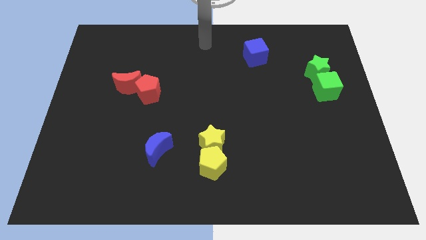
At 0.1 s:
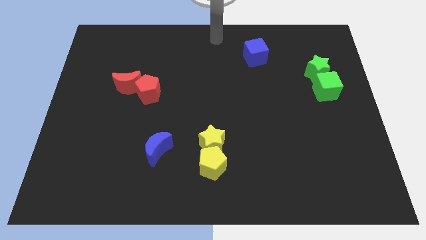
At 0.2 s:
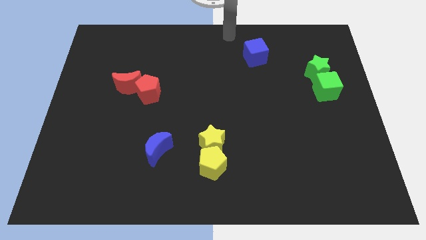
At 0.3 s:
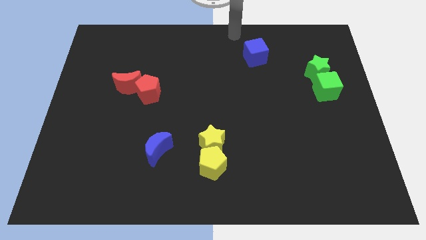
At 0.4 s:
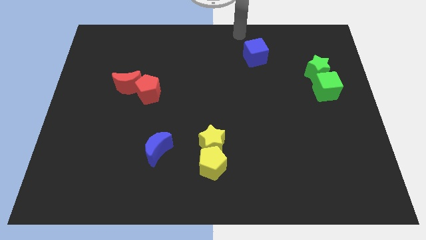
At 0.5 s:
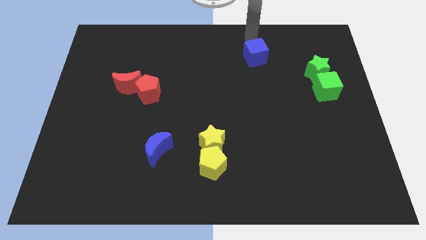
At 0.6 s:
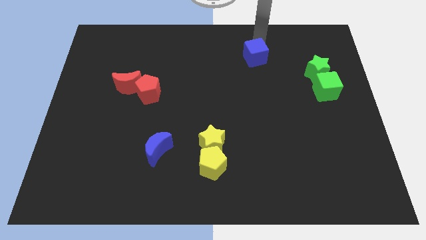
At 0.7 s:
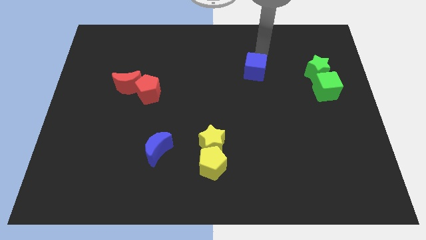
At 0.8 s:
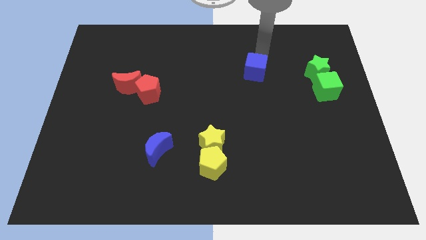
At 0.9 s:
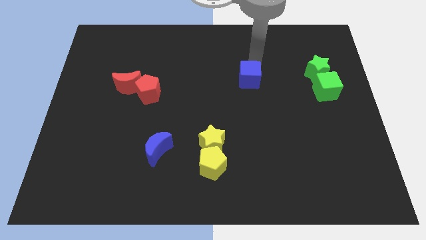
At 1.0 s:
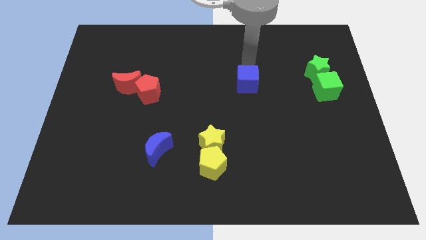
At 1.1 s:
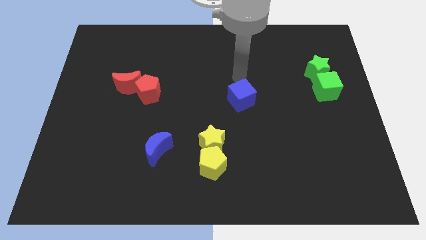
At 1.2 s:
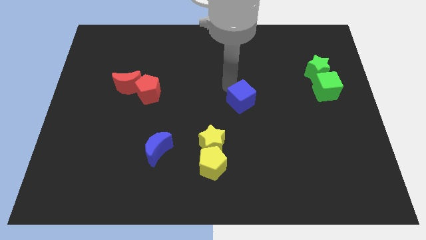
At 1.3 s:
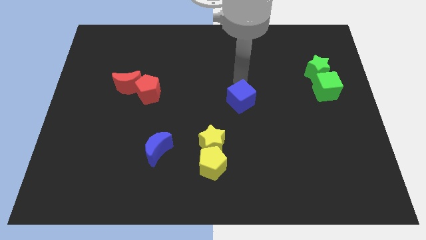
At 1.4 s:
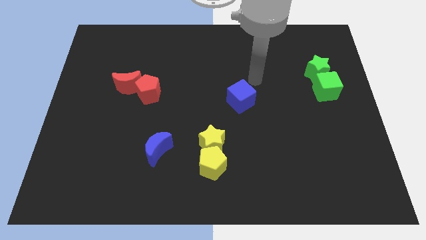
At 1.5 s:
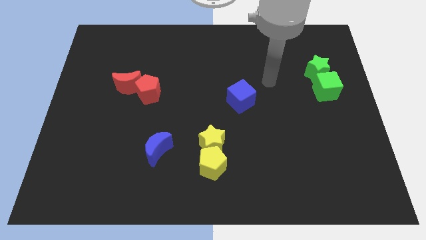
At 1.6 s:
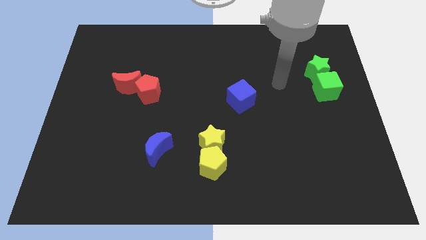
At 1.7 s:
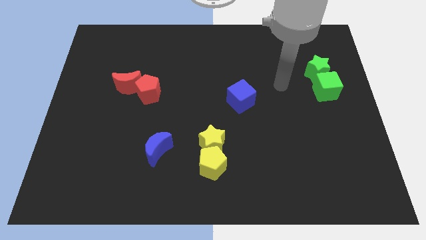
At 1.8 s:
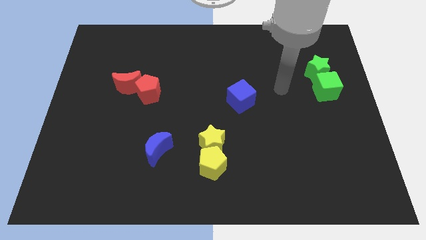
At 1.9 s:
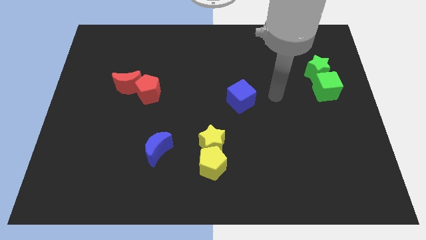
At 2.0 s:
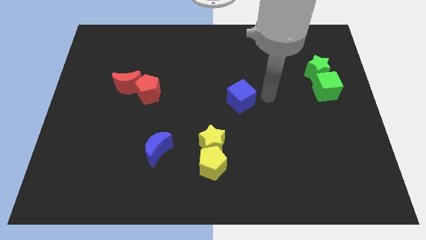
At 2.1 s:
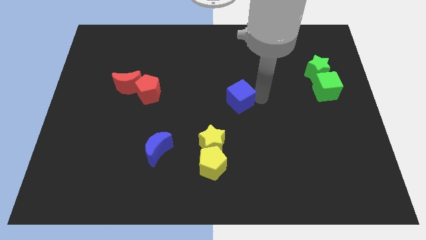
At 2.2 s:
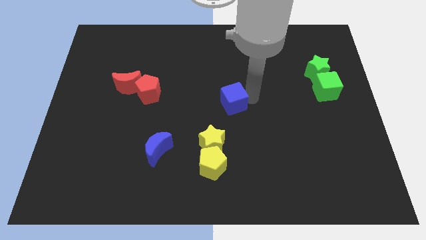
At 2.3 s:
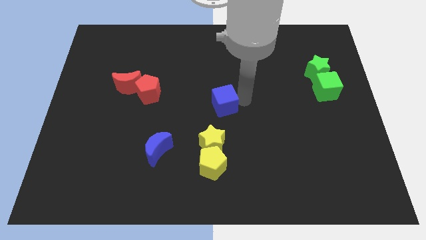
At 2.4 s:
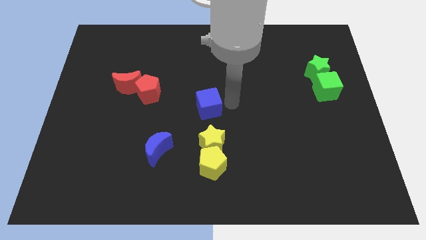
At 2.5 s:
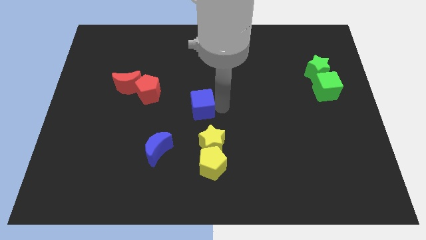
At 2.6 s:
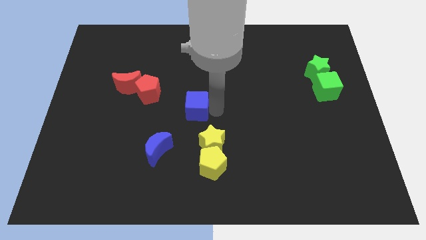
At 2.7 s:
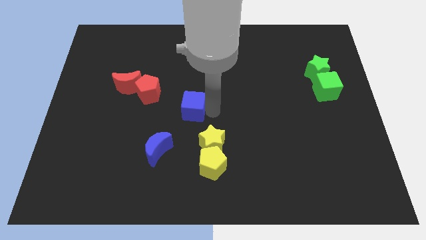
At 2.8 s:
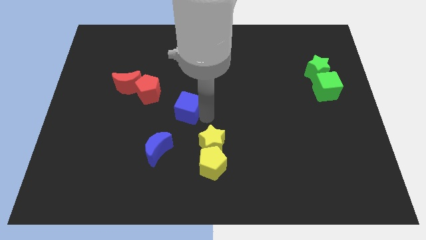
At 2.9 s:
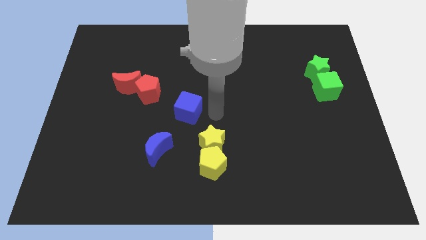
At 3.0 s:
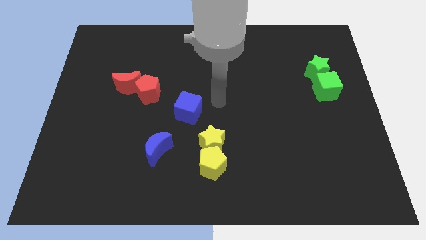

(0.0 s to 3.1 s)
drag the blue cube slightly downwards

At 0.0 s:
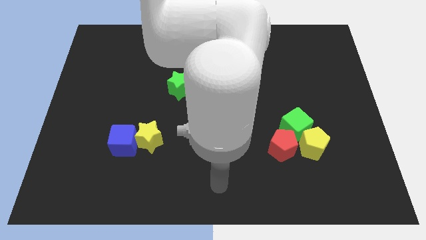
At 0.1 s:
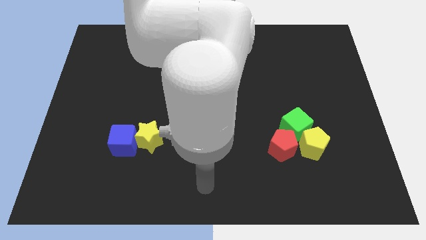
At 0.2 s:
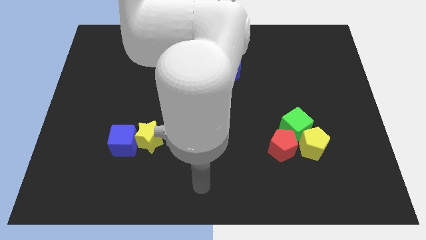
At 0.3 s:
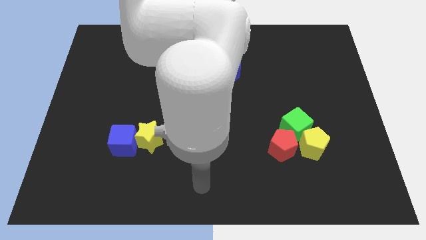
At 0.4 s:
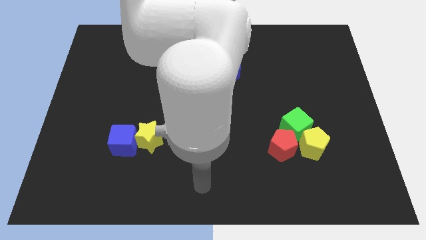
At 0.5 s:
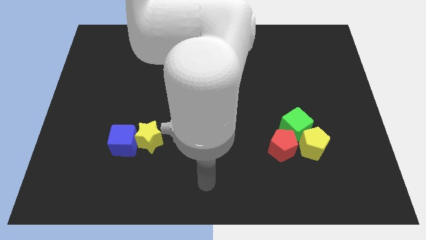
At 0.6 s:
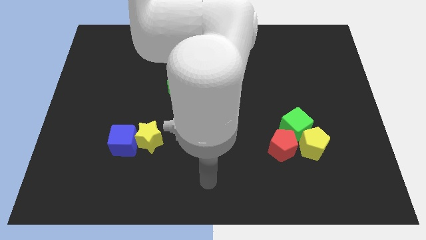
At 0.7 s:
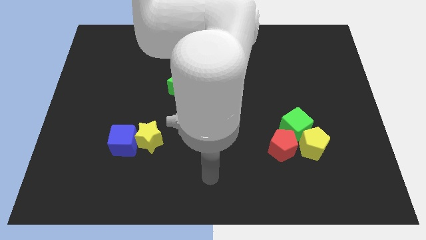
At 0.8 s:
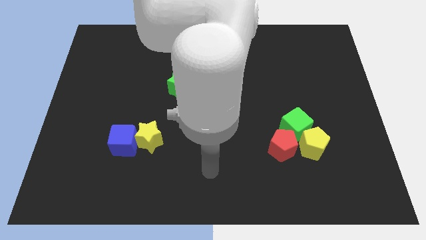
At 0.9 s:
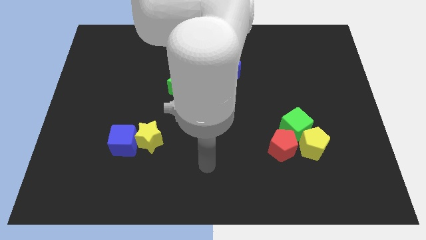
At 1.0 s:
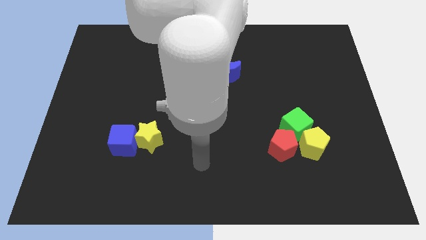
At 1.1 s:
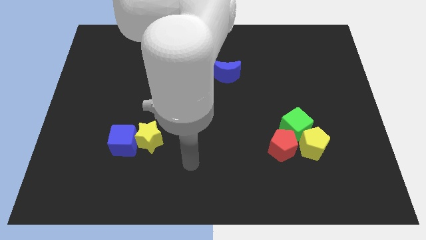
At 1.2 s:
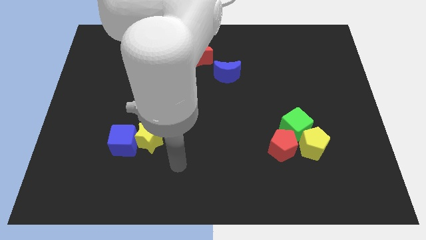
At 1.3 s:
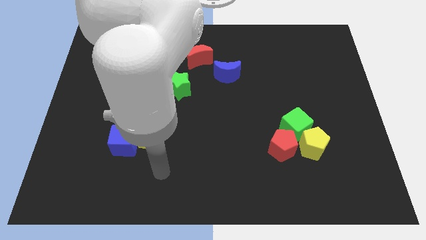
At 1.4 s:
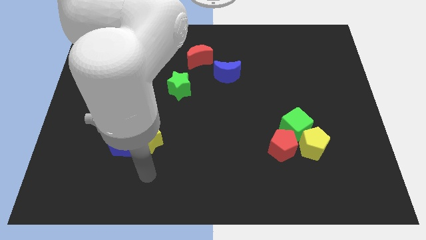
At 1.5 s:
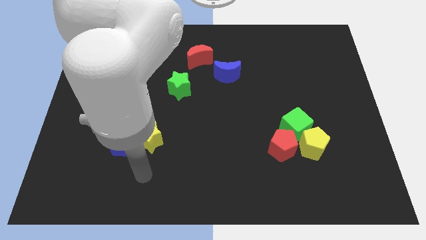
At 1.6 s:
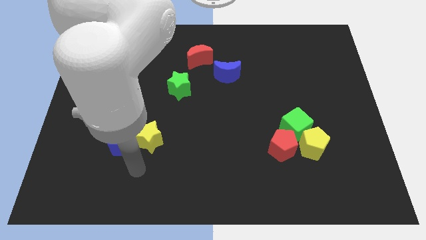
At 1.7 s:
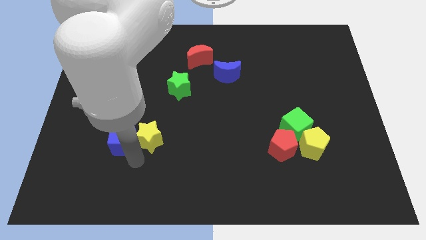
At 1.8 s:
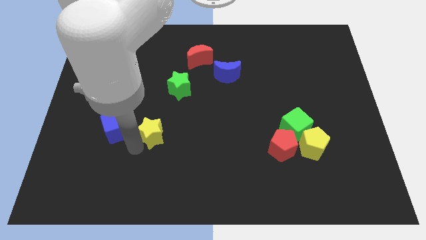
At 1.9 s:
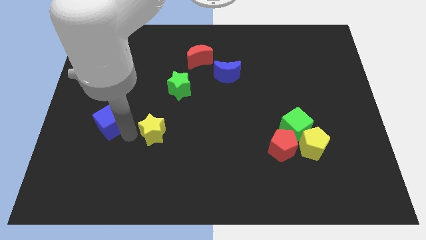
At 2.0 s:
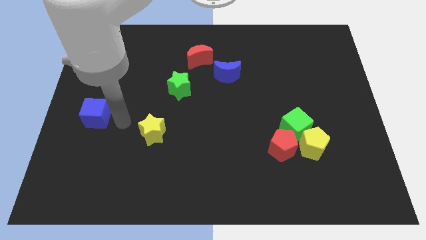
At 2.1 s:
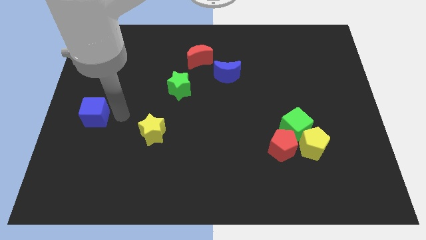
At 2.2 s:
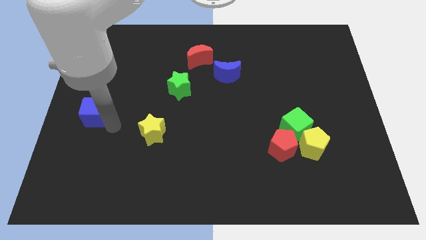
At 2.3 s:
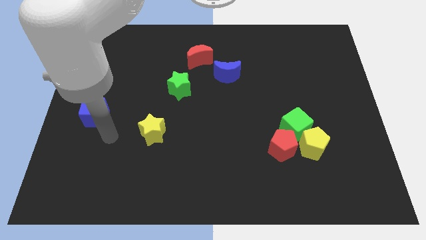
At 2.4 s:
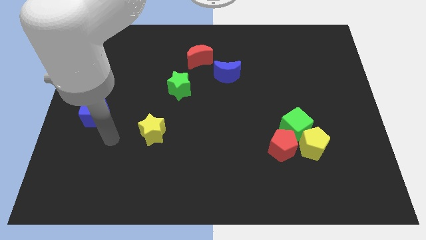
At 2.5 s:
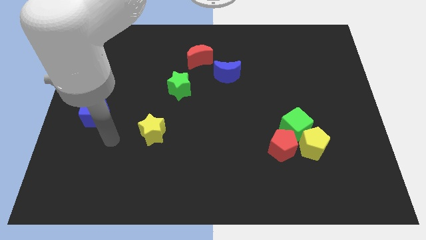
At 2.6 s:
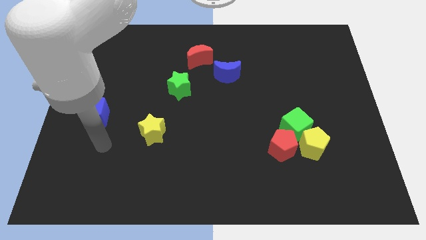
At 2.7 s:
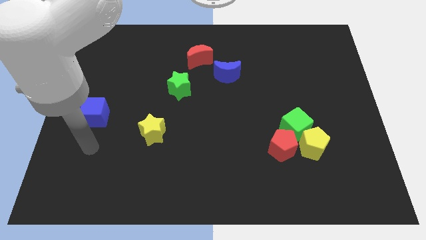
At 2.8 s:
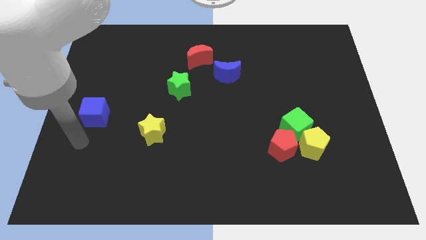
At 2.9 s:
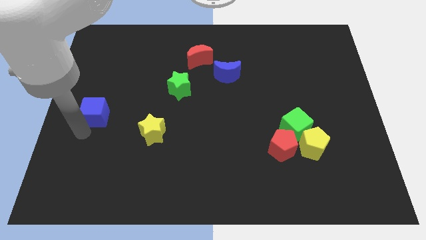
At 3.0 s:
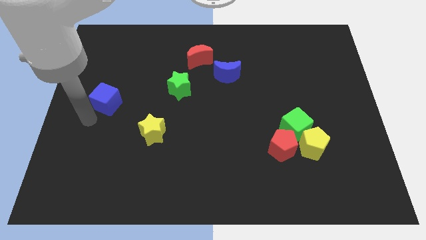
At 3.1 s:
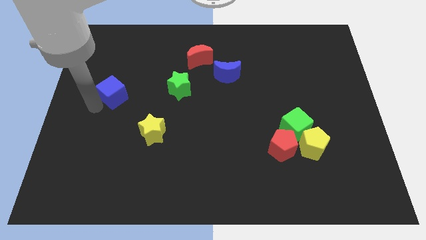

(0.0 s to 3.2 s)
push the blue cube to the top left of the yellow star

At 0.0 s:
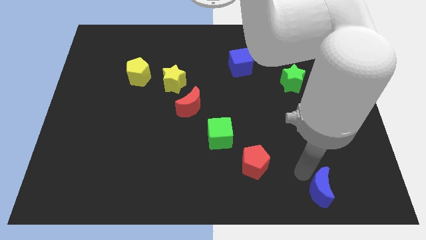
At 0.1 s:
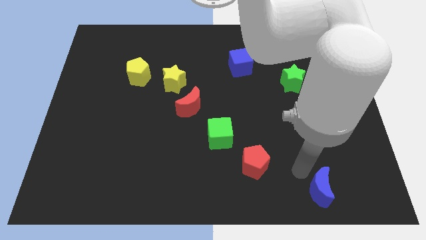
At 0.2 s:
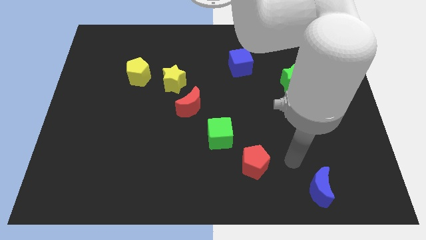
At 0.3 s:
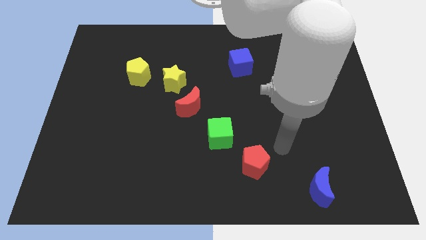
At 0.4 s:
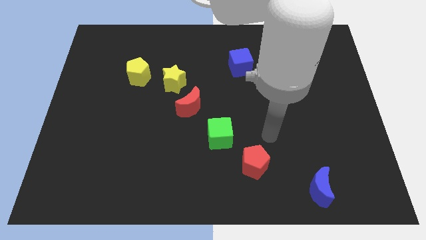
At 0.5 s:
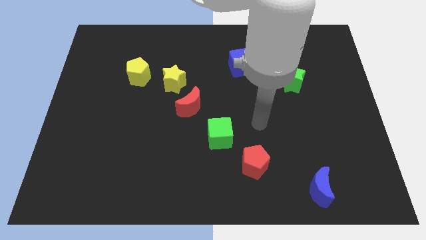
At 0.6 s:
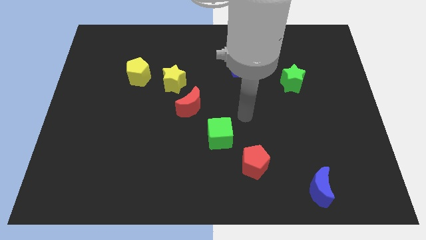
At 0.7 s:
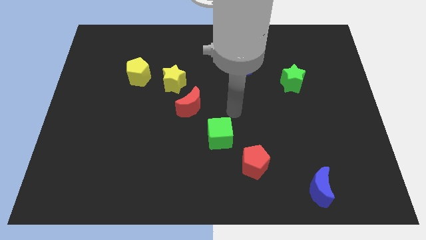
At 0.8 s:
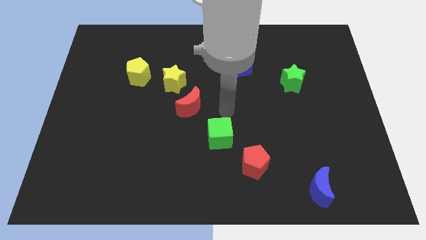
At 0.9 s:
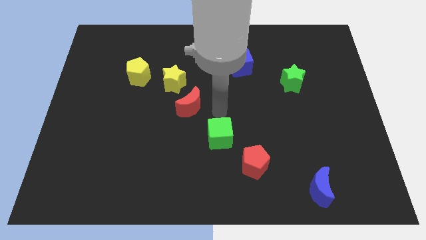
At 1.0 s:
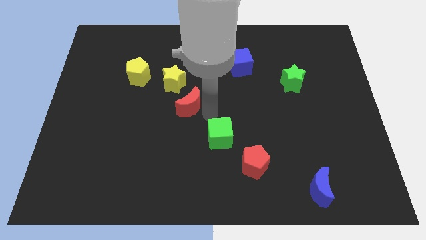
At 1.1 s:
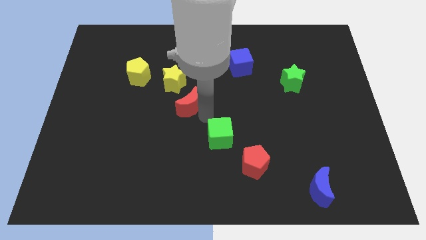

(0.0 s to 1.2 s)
place arm on the top of green cube

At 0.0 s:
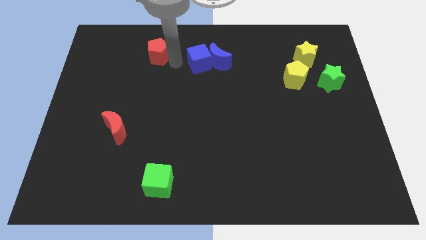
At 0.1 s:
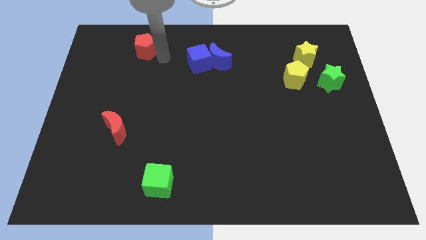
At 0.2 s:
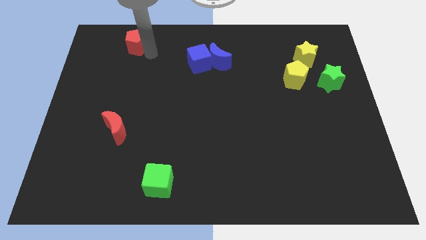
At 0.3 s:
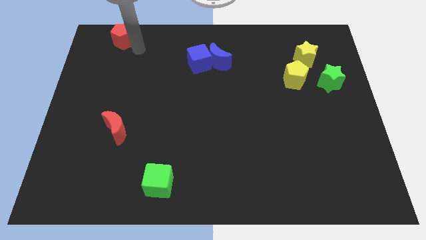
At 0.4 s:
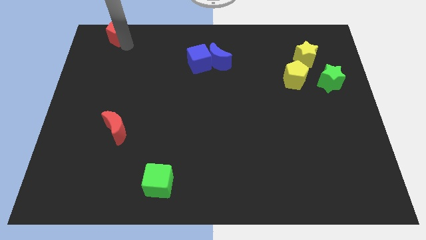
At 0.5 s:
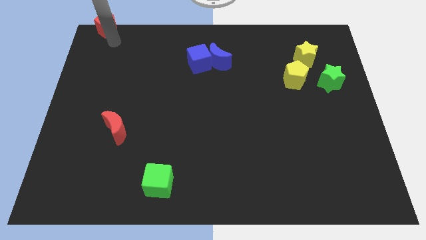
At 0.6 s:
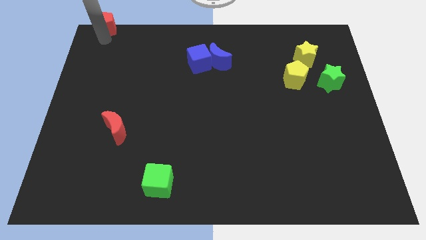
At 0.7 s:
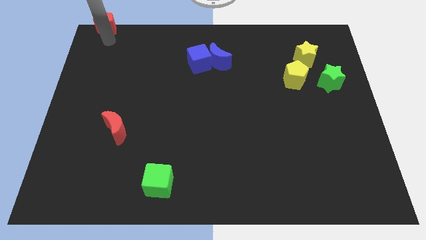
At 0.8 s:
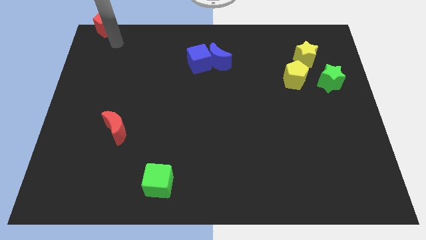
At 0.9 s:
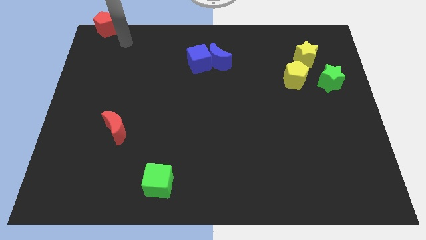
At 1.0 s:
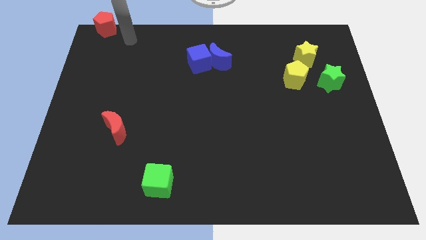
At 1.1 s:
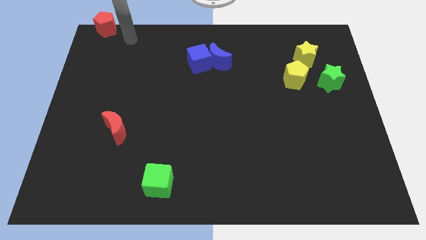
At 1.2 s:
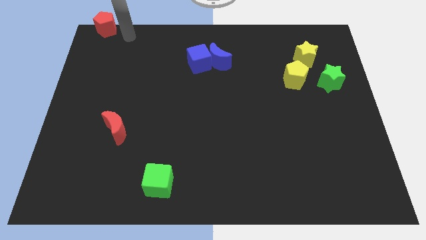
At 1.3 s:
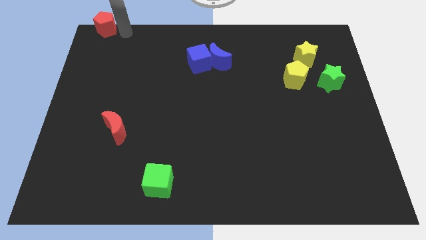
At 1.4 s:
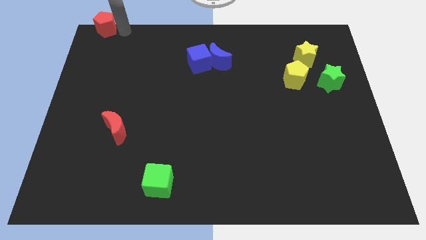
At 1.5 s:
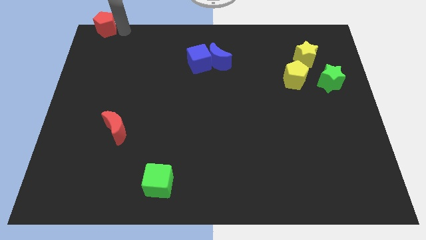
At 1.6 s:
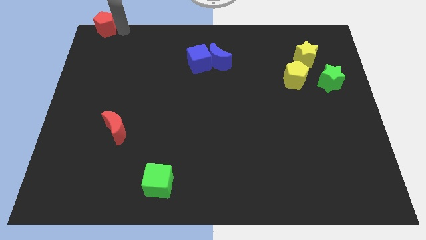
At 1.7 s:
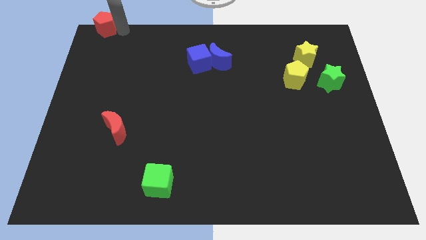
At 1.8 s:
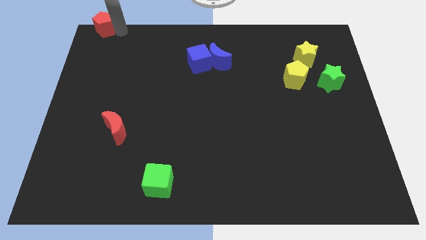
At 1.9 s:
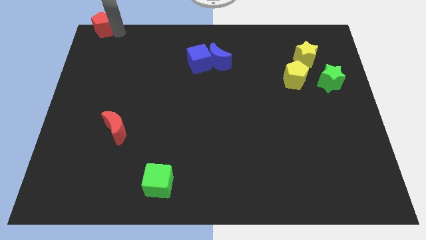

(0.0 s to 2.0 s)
push the red pentagon away from the blue cube
